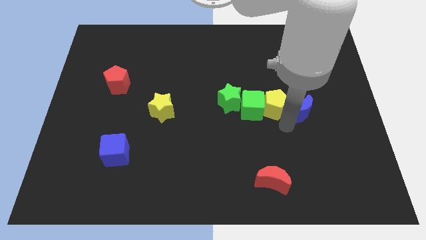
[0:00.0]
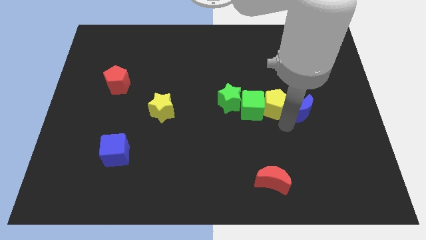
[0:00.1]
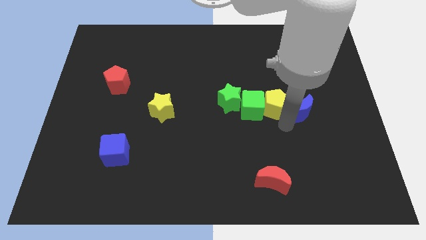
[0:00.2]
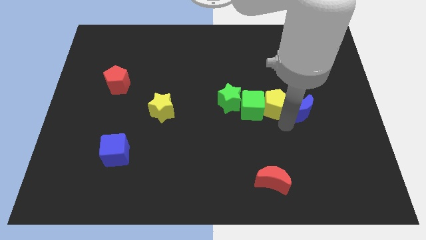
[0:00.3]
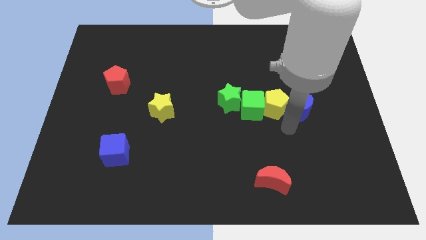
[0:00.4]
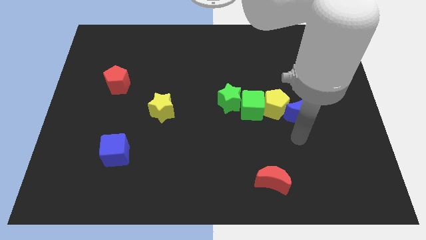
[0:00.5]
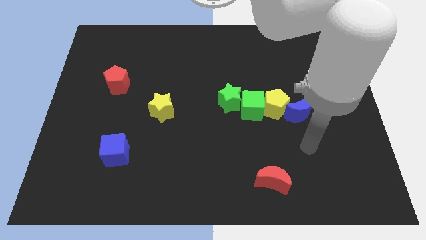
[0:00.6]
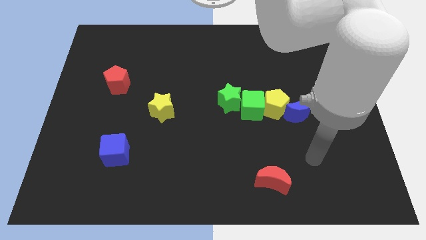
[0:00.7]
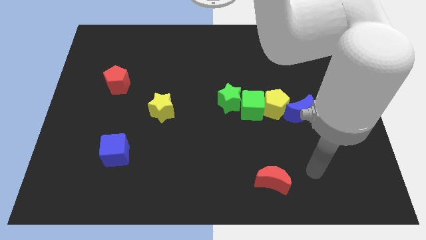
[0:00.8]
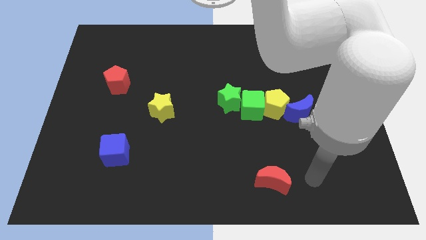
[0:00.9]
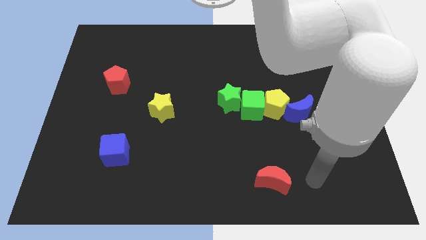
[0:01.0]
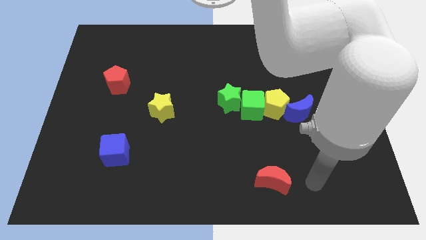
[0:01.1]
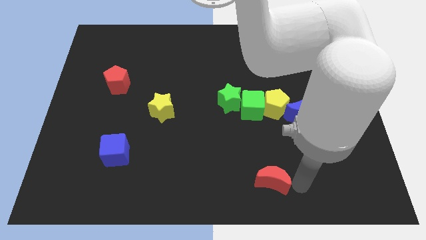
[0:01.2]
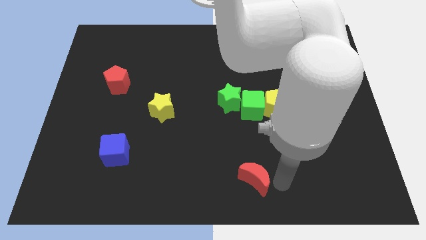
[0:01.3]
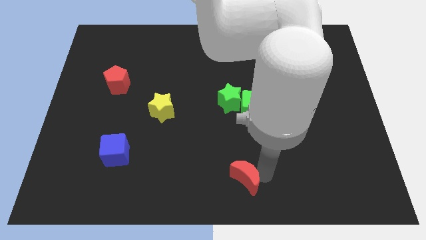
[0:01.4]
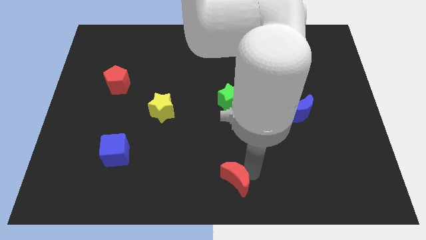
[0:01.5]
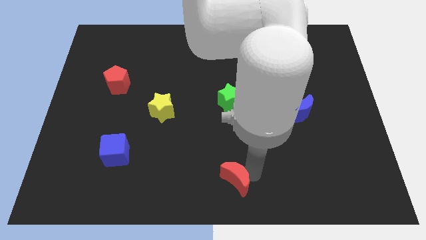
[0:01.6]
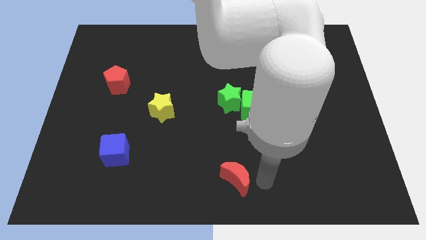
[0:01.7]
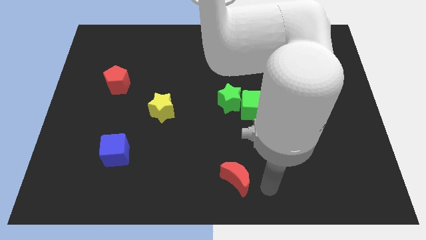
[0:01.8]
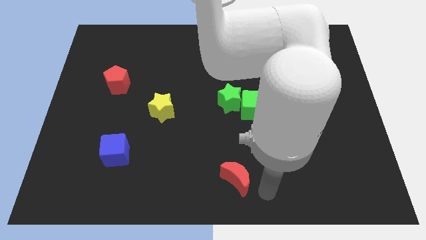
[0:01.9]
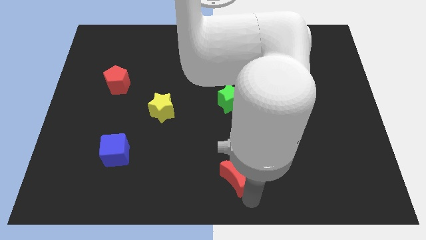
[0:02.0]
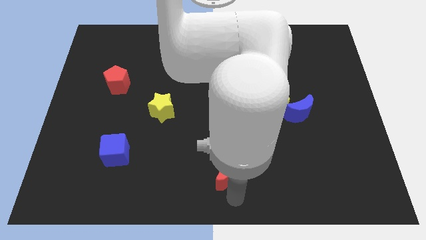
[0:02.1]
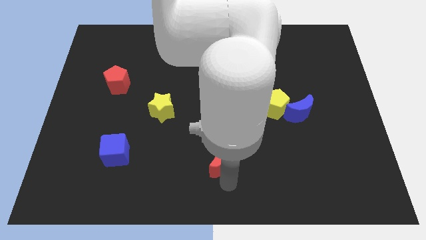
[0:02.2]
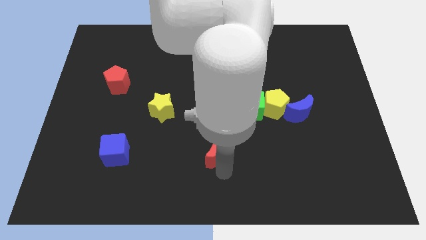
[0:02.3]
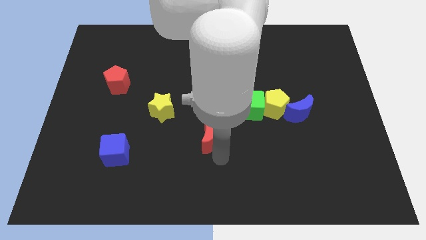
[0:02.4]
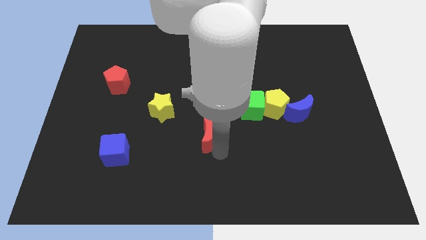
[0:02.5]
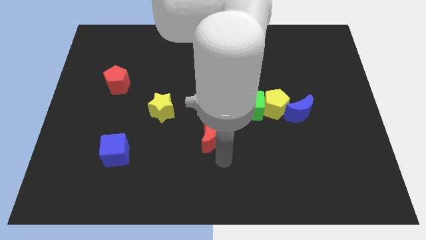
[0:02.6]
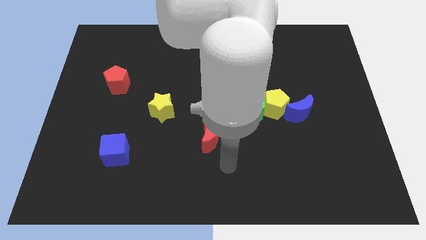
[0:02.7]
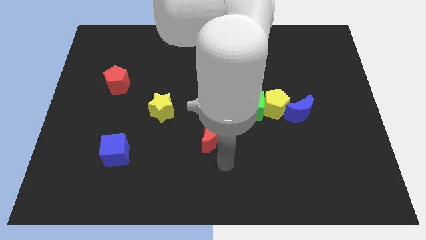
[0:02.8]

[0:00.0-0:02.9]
place the red moon diagonally bottom right to the yellow star

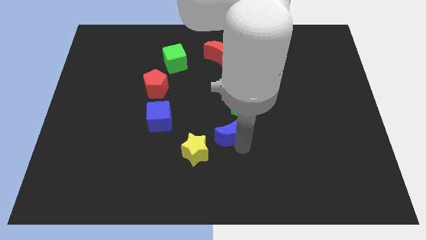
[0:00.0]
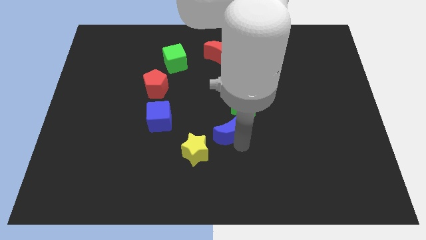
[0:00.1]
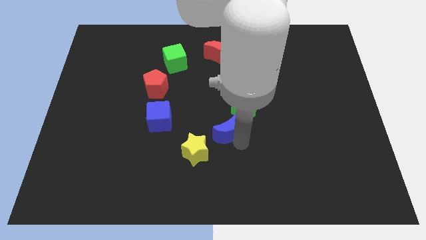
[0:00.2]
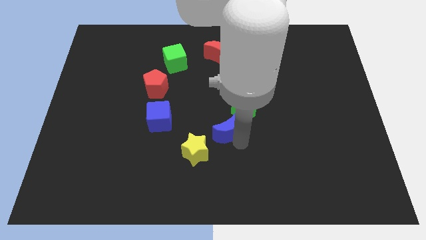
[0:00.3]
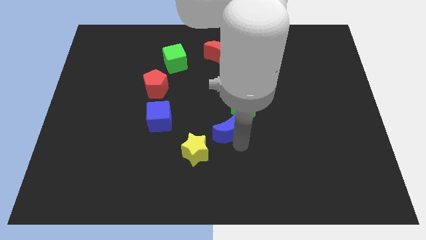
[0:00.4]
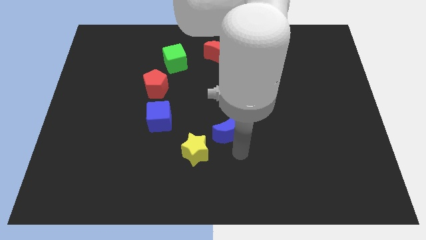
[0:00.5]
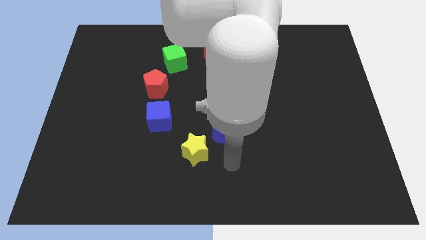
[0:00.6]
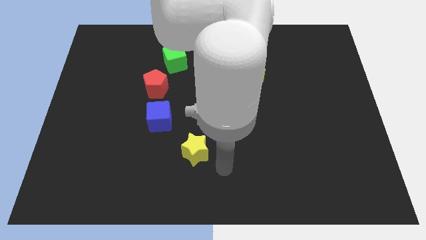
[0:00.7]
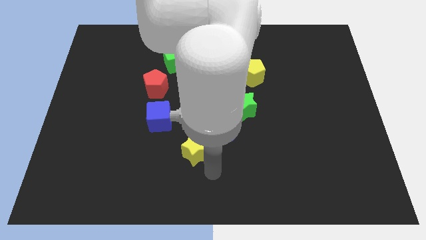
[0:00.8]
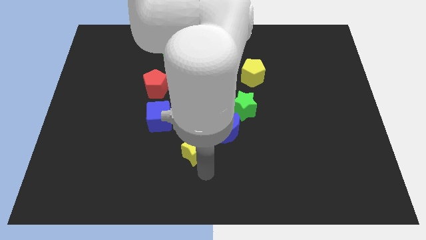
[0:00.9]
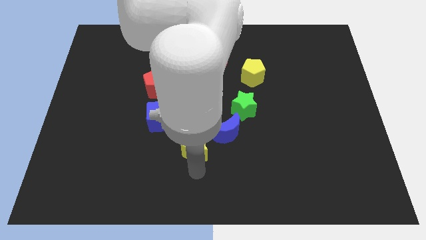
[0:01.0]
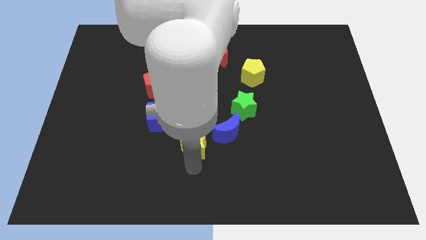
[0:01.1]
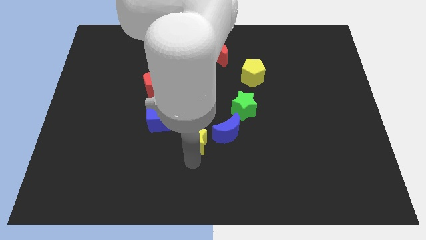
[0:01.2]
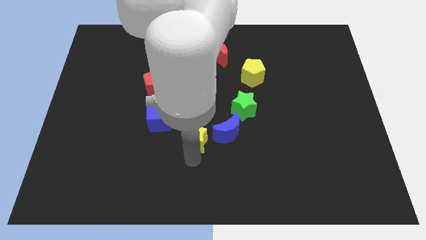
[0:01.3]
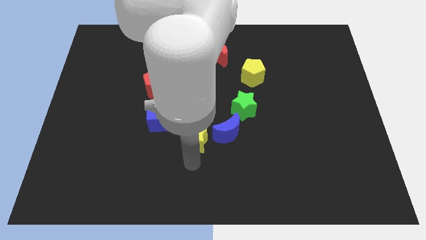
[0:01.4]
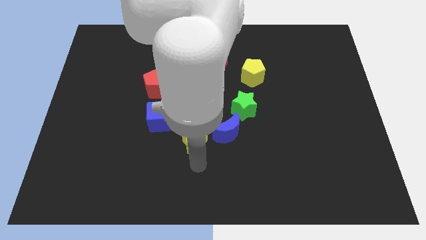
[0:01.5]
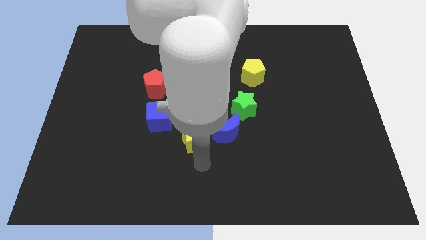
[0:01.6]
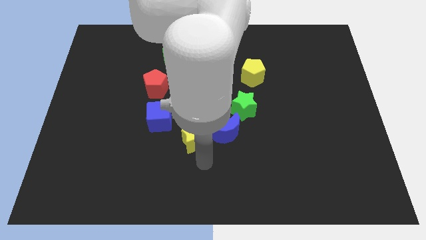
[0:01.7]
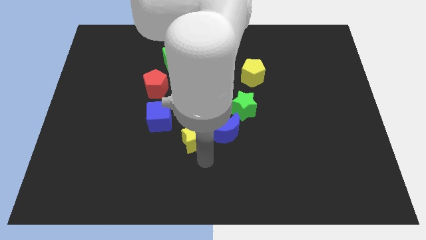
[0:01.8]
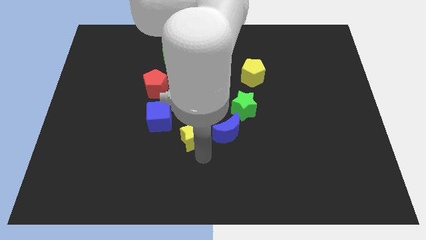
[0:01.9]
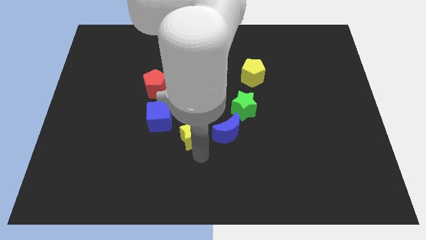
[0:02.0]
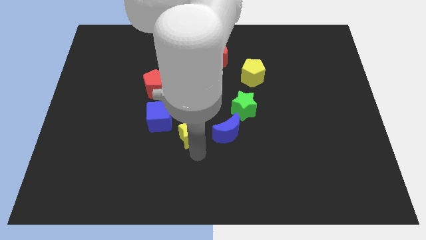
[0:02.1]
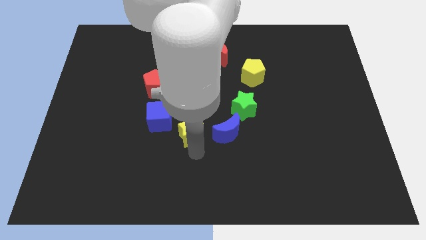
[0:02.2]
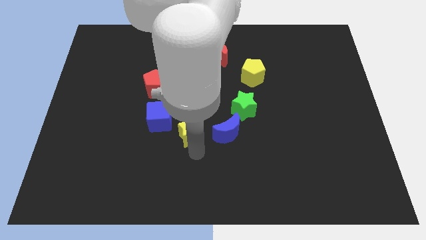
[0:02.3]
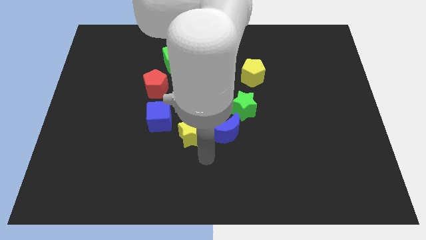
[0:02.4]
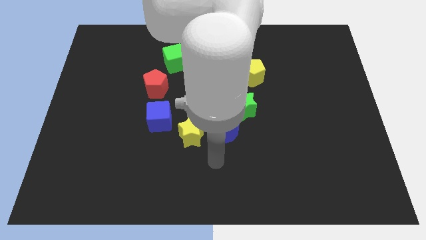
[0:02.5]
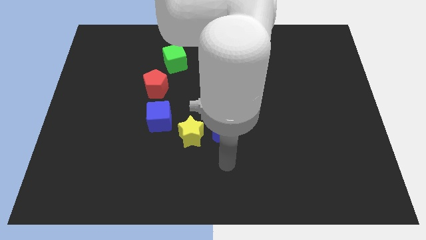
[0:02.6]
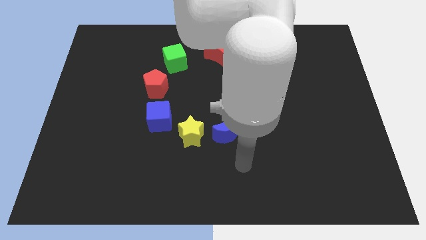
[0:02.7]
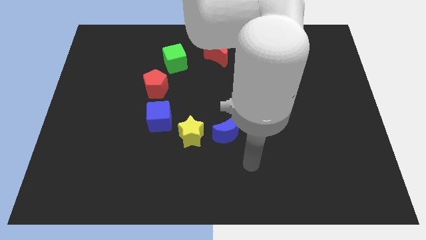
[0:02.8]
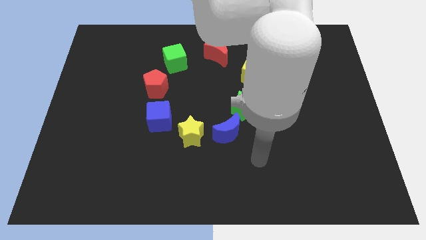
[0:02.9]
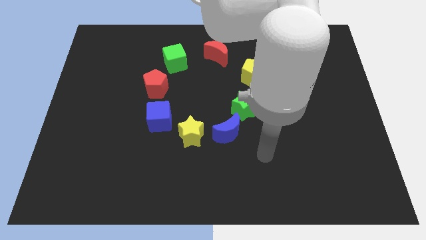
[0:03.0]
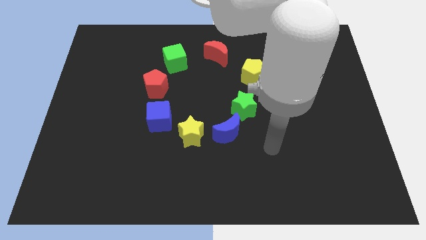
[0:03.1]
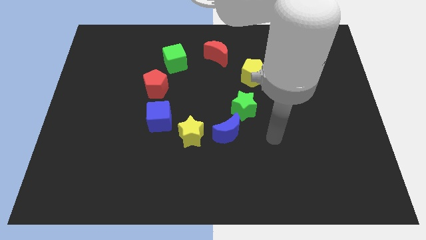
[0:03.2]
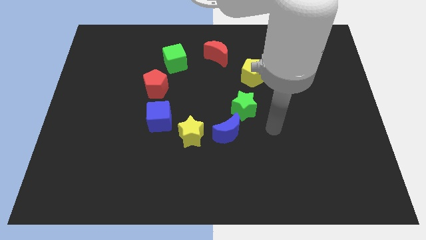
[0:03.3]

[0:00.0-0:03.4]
move the yellow star to makecircle

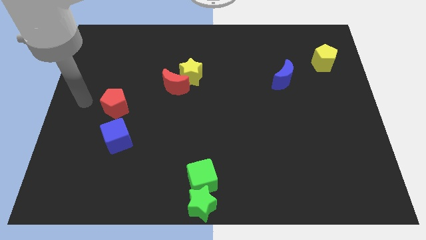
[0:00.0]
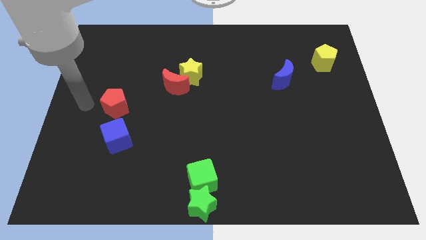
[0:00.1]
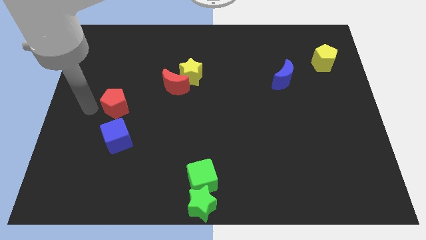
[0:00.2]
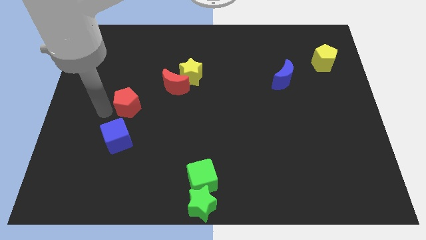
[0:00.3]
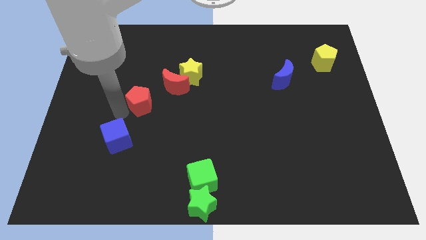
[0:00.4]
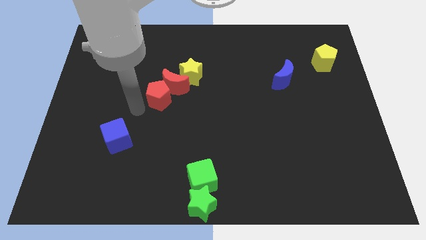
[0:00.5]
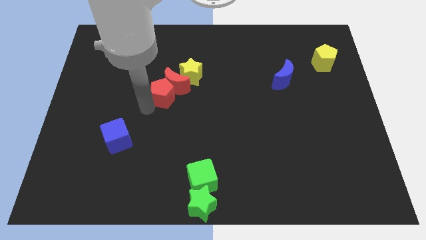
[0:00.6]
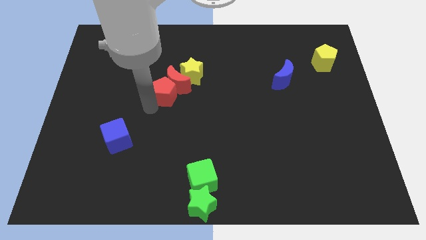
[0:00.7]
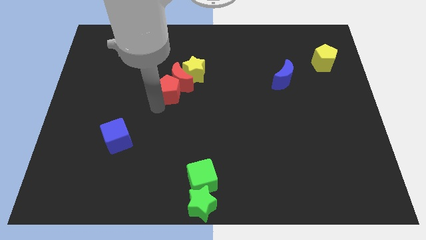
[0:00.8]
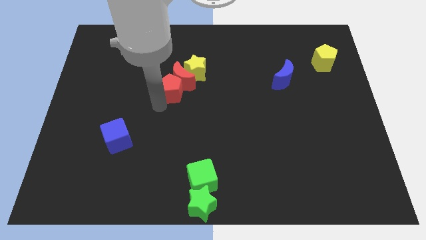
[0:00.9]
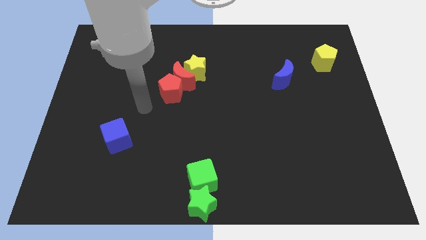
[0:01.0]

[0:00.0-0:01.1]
push the red pentagon into the red crescent

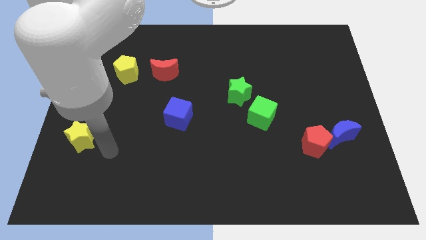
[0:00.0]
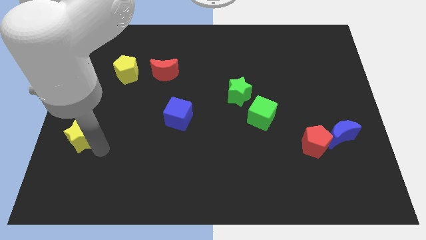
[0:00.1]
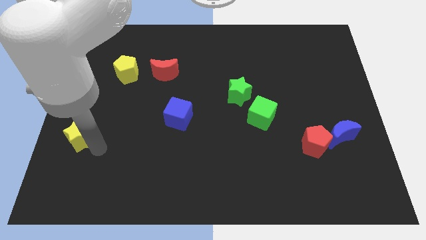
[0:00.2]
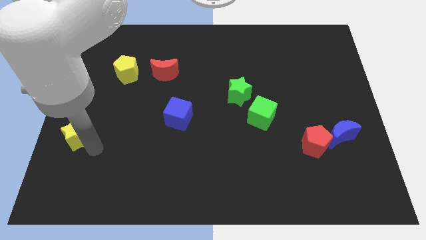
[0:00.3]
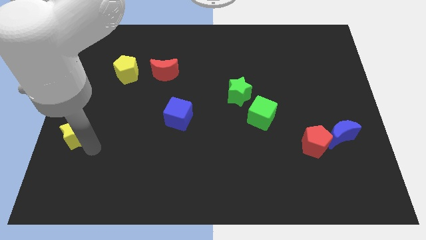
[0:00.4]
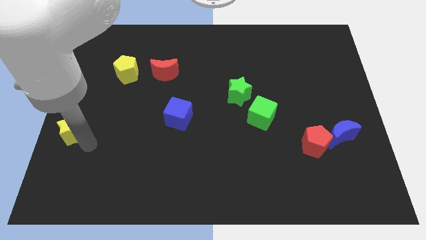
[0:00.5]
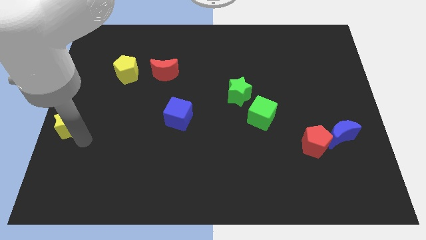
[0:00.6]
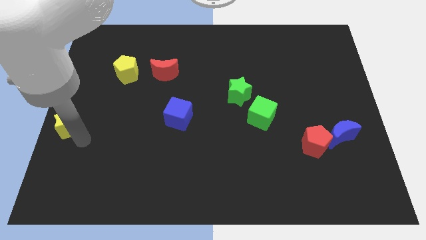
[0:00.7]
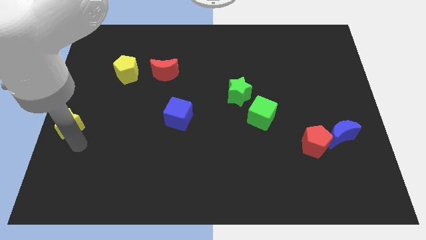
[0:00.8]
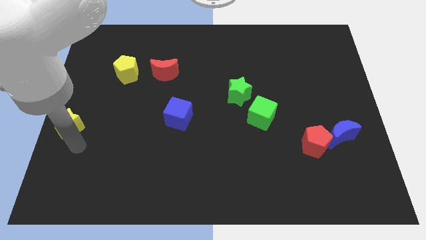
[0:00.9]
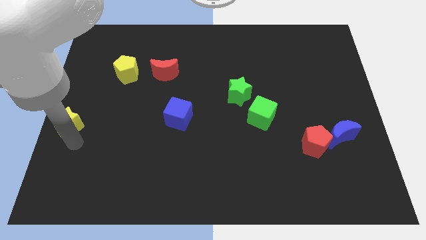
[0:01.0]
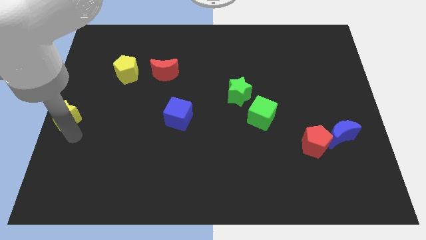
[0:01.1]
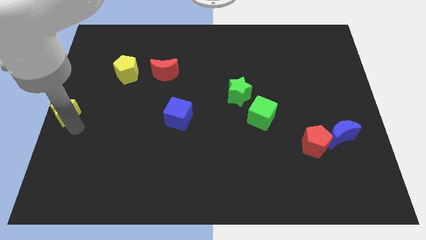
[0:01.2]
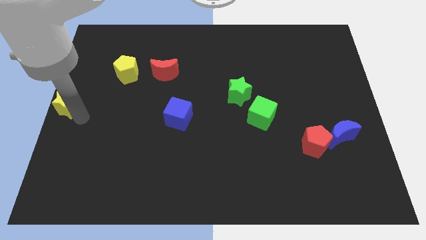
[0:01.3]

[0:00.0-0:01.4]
push yellow star towards the left centre
